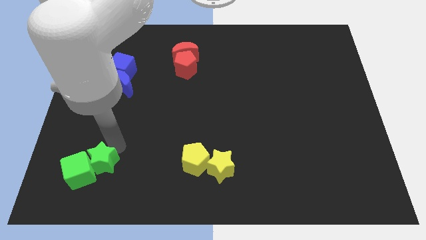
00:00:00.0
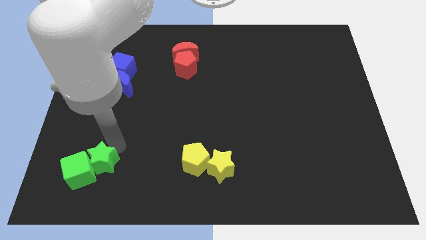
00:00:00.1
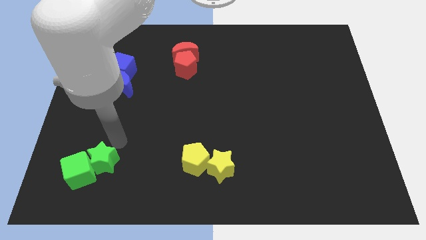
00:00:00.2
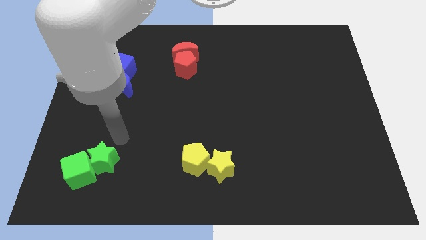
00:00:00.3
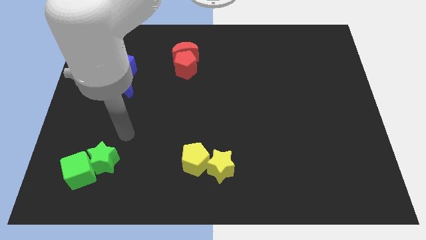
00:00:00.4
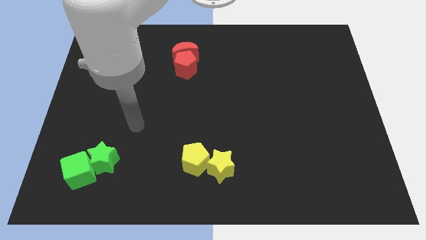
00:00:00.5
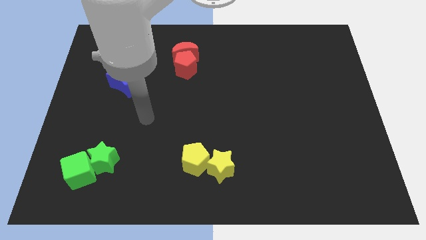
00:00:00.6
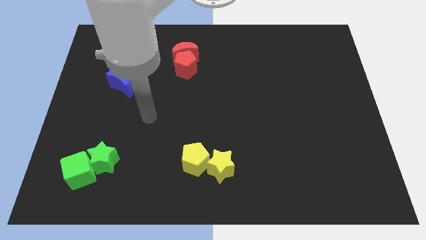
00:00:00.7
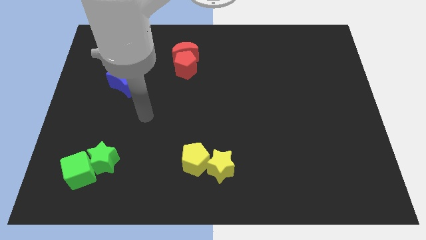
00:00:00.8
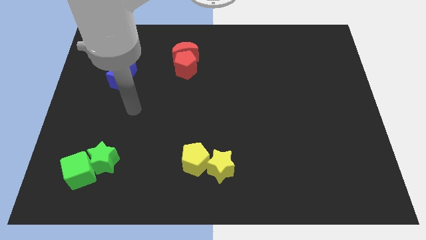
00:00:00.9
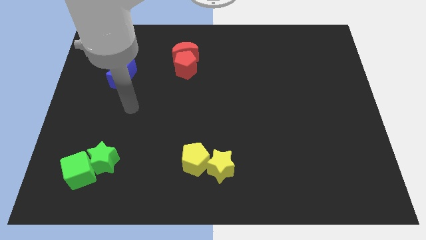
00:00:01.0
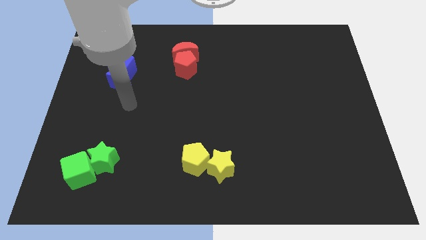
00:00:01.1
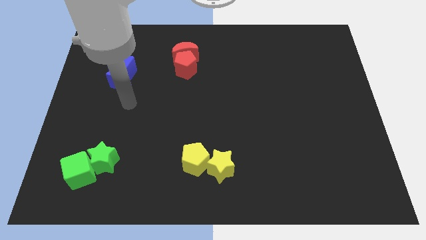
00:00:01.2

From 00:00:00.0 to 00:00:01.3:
move your arm towards the blue blocks

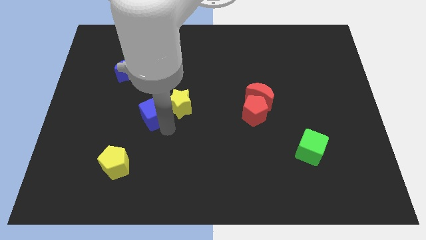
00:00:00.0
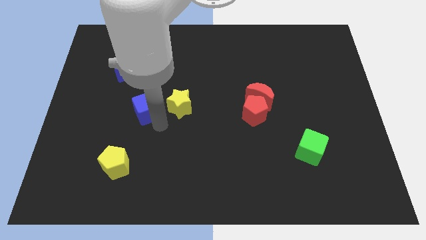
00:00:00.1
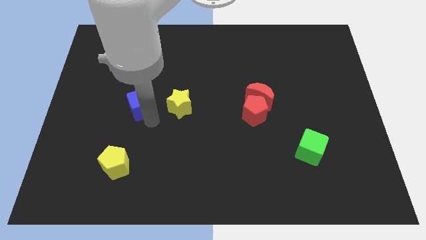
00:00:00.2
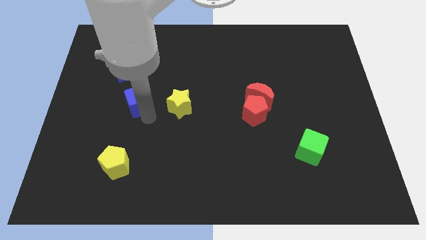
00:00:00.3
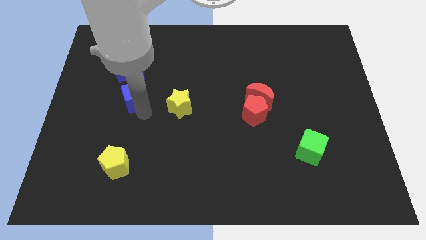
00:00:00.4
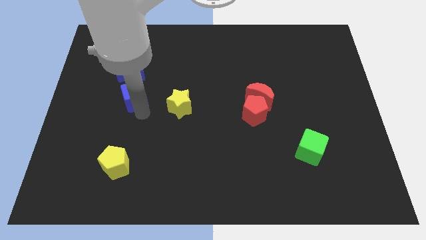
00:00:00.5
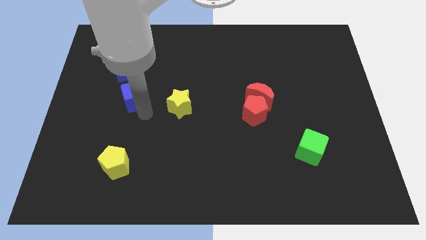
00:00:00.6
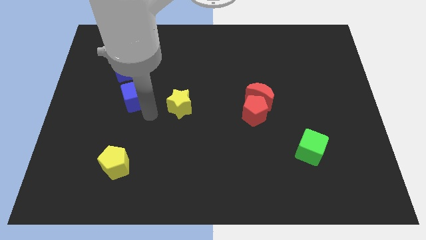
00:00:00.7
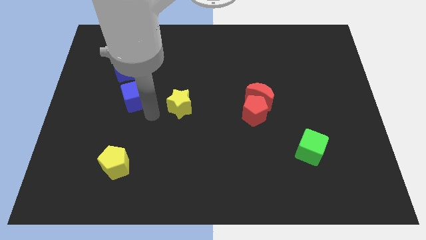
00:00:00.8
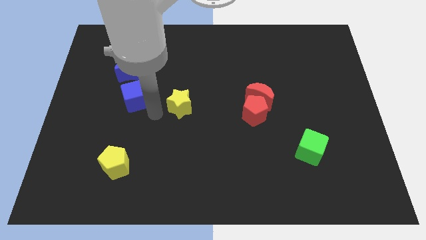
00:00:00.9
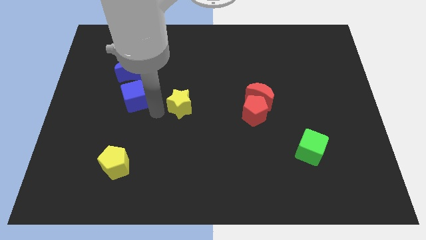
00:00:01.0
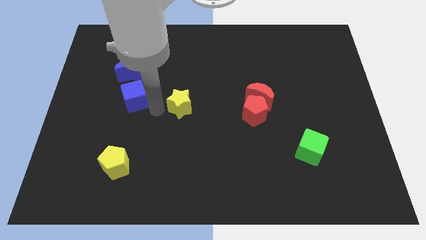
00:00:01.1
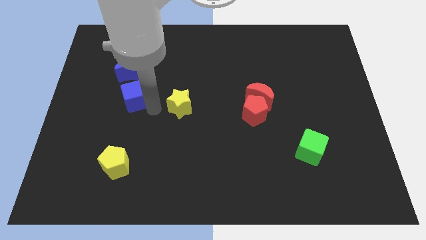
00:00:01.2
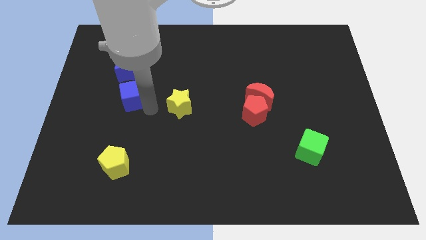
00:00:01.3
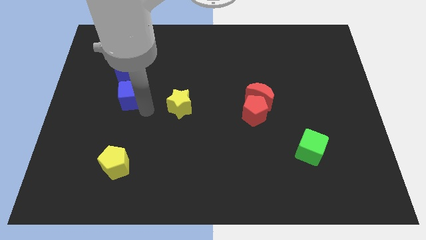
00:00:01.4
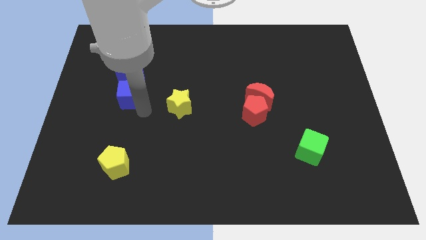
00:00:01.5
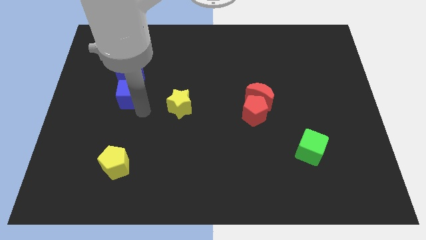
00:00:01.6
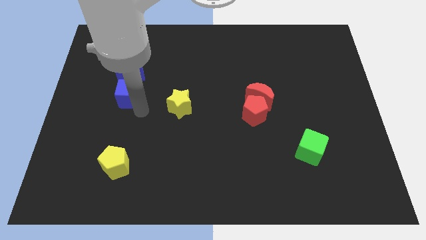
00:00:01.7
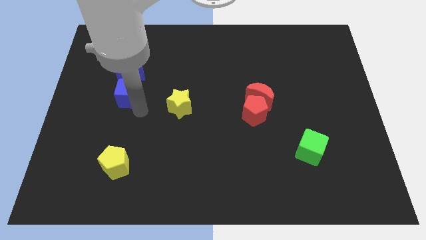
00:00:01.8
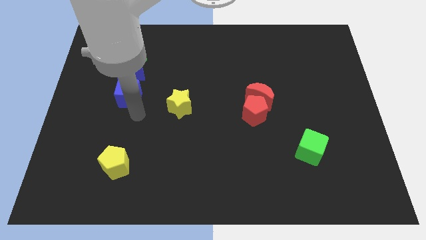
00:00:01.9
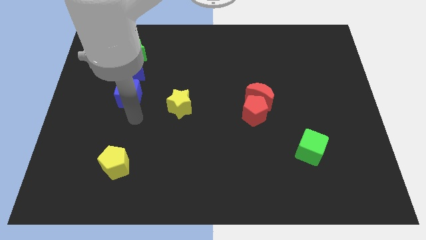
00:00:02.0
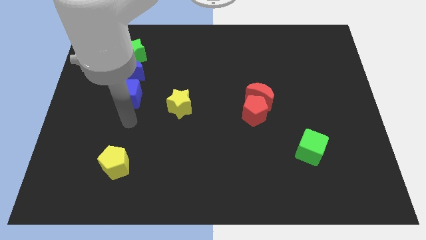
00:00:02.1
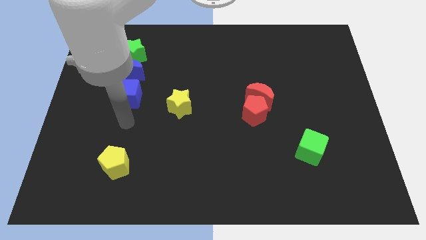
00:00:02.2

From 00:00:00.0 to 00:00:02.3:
separate the blue cube from the yellow star

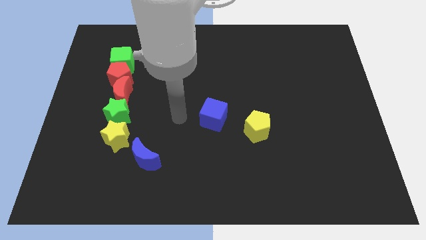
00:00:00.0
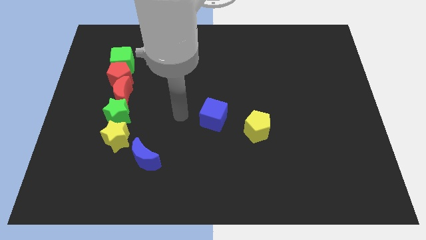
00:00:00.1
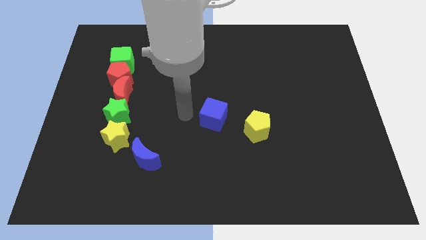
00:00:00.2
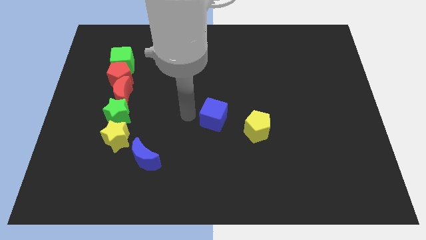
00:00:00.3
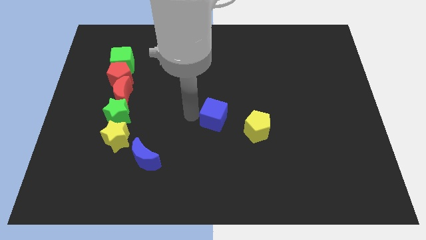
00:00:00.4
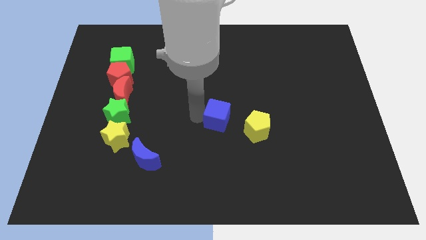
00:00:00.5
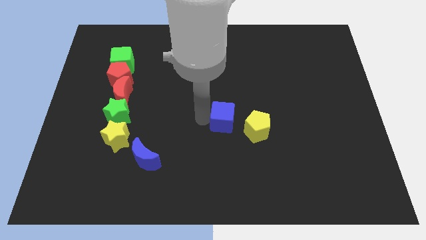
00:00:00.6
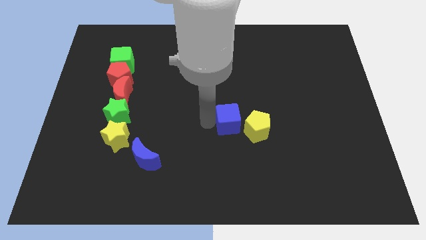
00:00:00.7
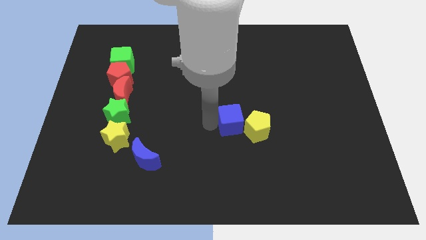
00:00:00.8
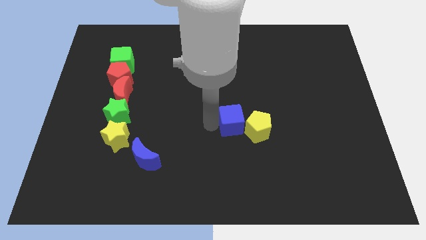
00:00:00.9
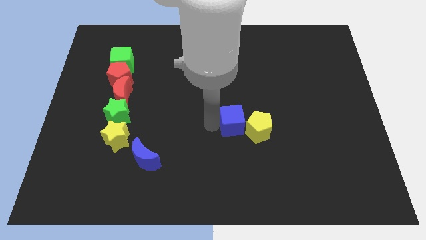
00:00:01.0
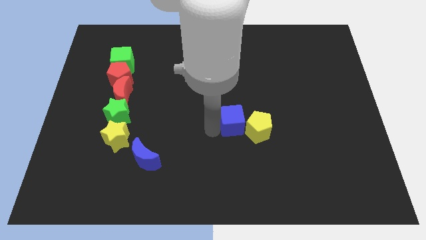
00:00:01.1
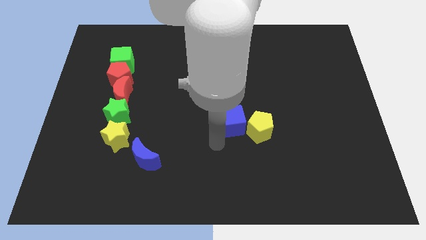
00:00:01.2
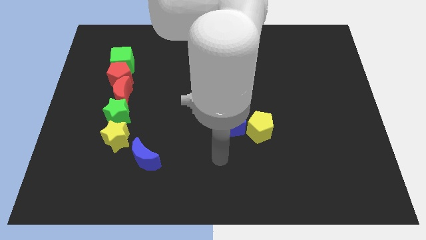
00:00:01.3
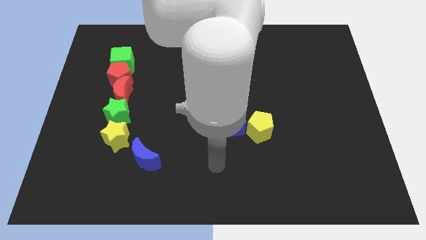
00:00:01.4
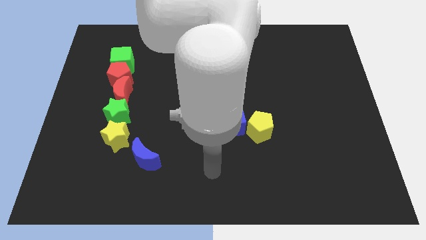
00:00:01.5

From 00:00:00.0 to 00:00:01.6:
push the blue cube towards the yellow pentagon

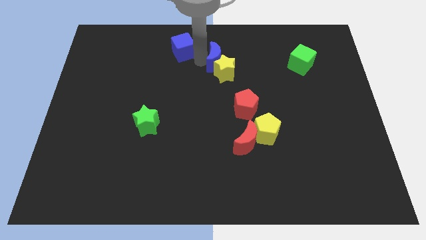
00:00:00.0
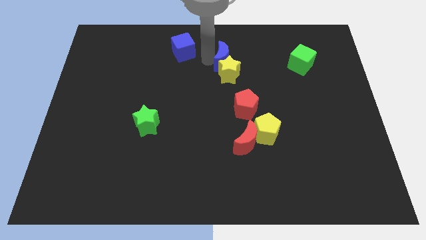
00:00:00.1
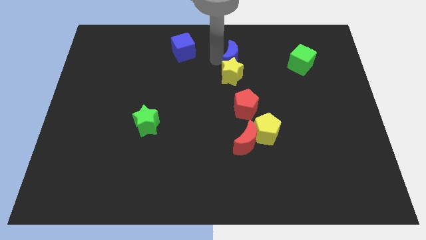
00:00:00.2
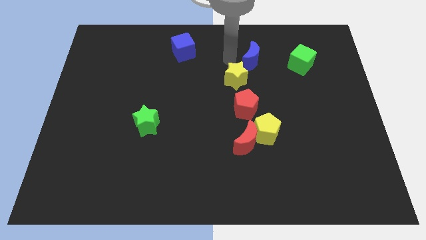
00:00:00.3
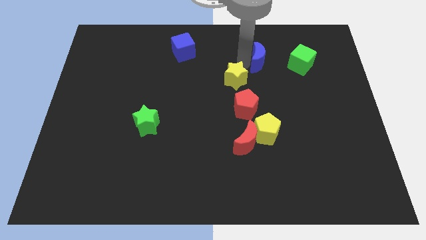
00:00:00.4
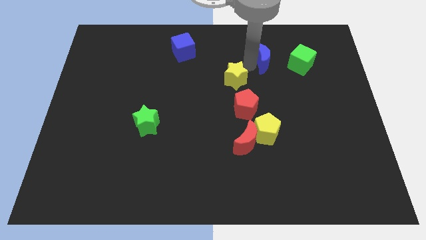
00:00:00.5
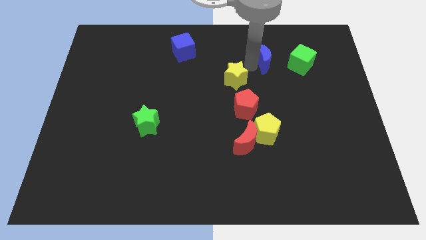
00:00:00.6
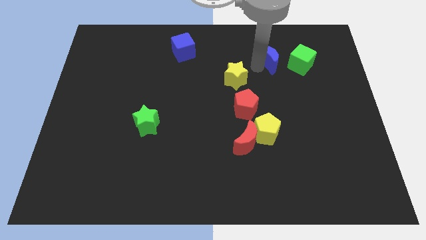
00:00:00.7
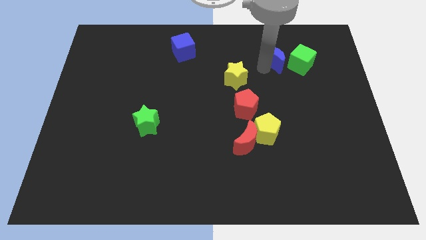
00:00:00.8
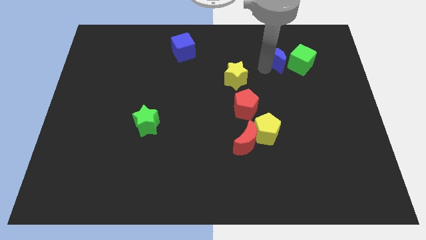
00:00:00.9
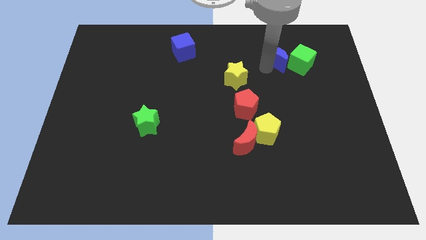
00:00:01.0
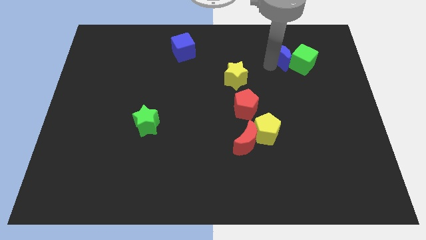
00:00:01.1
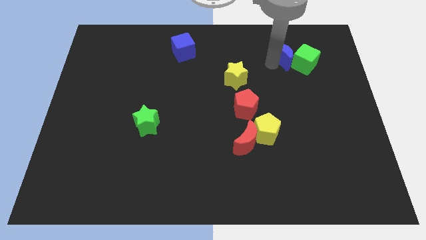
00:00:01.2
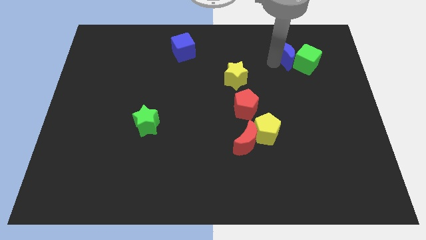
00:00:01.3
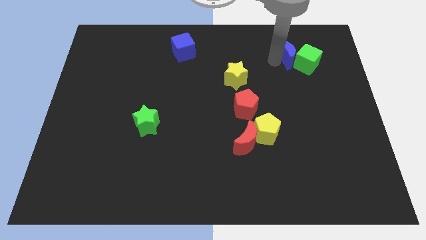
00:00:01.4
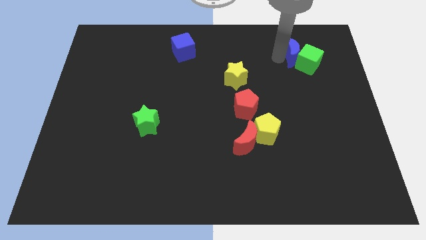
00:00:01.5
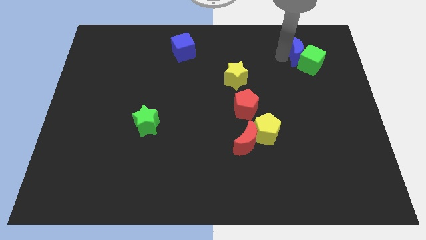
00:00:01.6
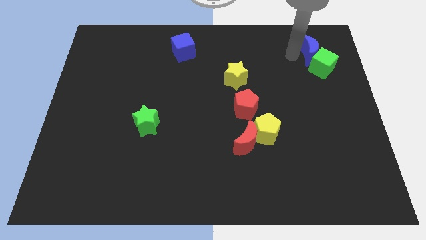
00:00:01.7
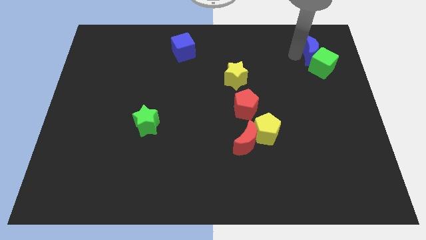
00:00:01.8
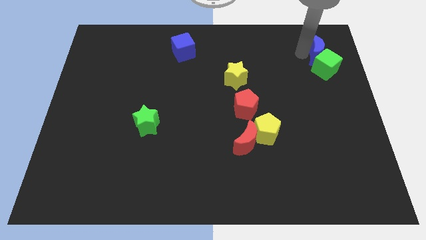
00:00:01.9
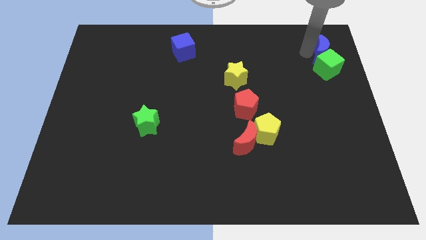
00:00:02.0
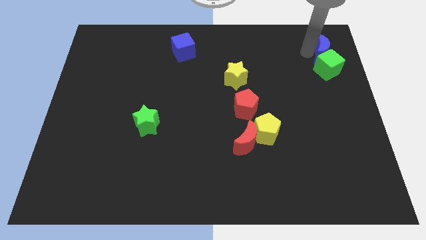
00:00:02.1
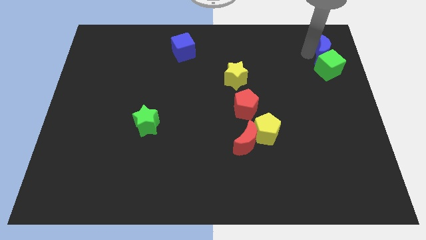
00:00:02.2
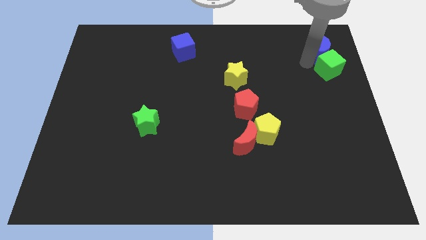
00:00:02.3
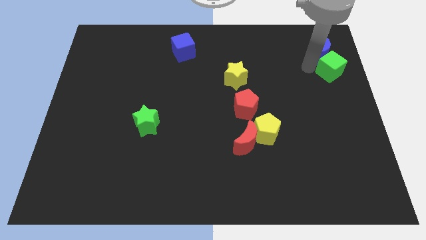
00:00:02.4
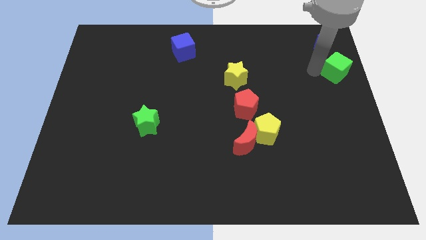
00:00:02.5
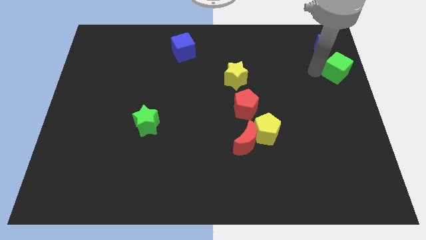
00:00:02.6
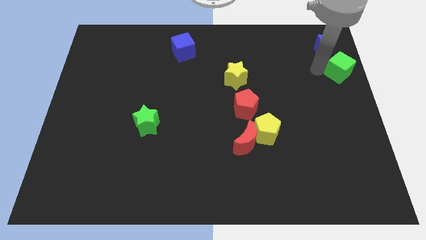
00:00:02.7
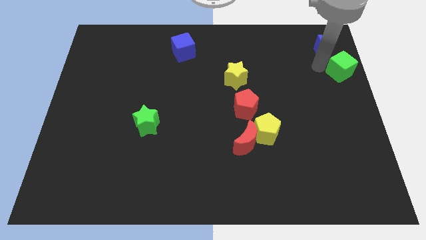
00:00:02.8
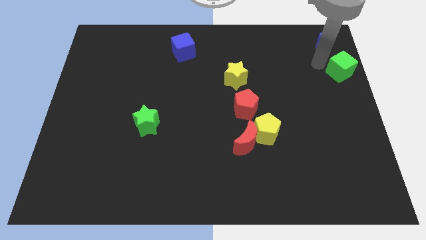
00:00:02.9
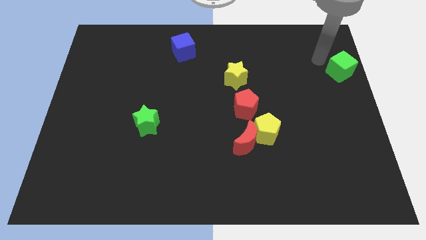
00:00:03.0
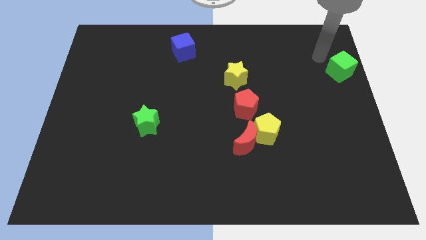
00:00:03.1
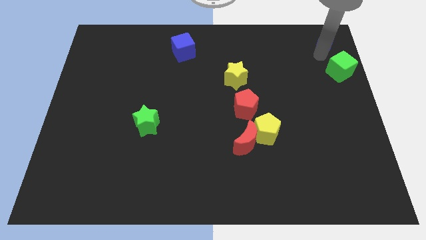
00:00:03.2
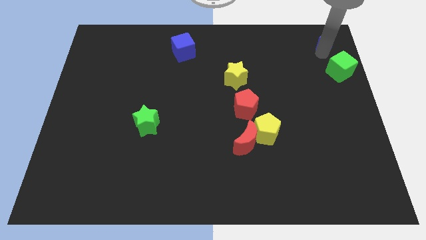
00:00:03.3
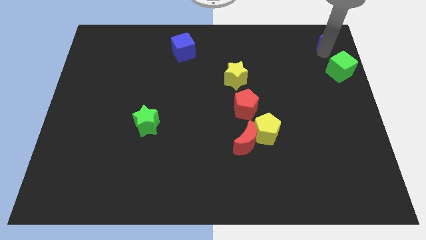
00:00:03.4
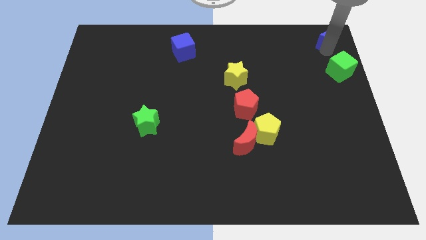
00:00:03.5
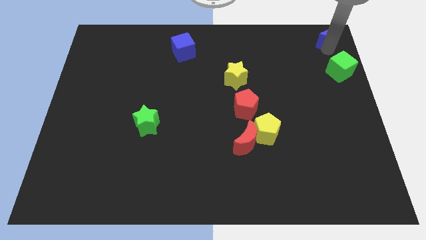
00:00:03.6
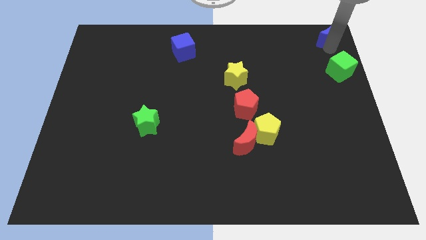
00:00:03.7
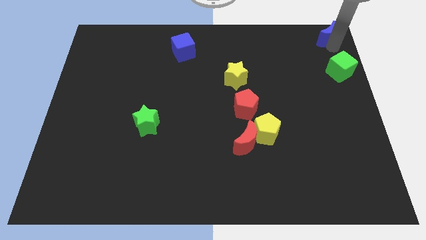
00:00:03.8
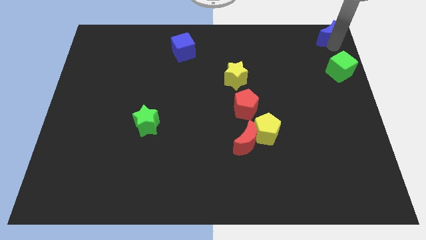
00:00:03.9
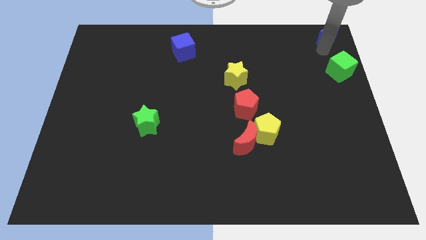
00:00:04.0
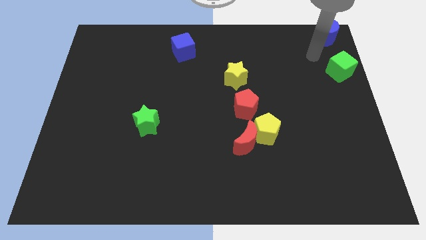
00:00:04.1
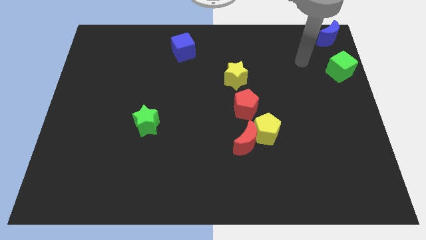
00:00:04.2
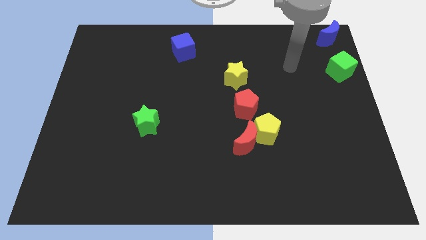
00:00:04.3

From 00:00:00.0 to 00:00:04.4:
place the blue moon vertically above the green cube
